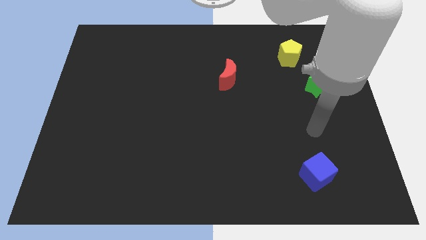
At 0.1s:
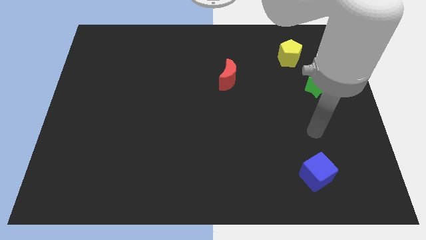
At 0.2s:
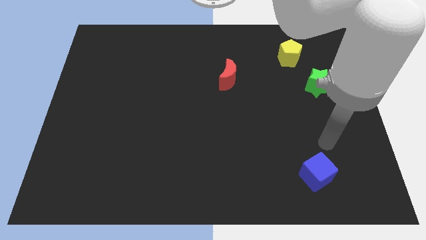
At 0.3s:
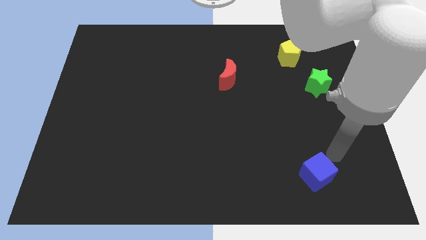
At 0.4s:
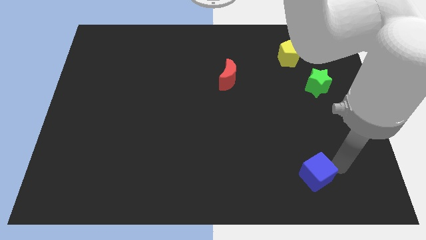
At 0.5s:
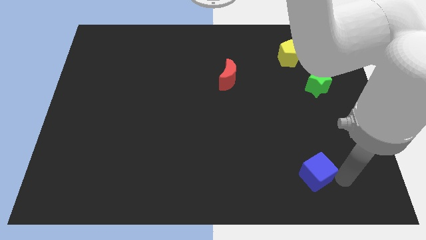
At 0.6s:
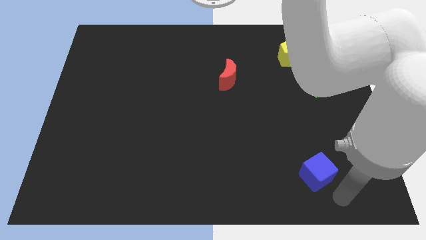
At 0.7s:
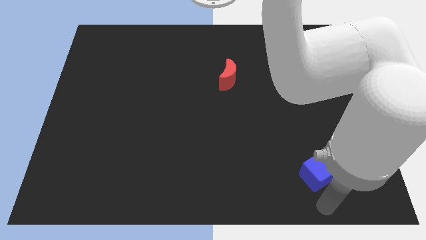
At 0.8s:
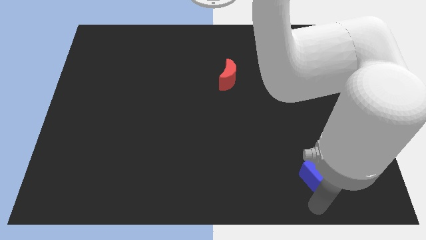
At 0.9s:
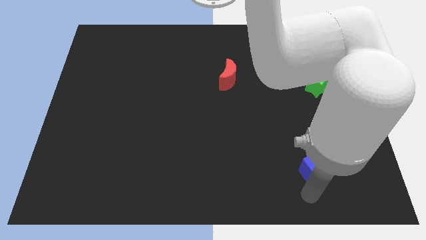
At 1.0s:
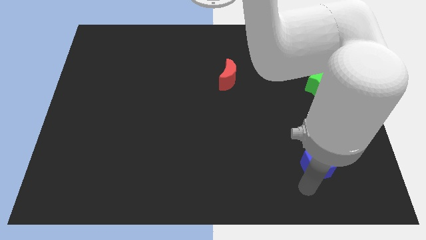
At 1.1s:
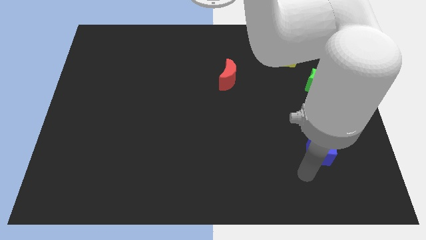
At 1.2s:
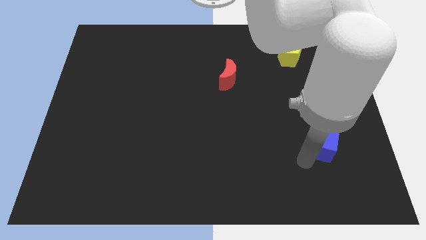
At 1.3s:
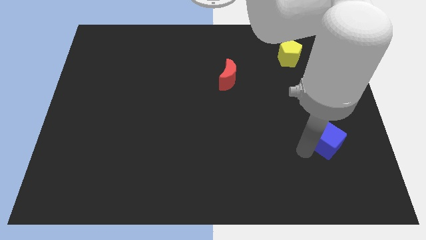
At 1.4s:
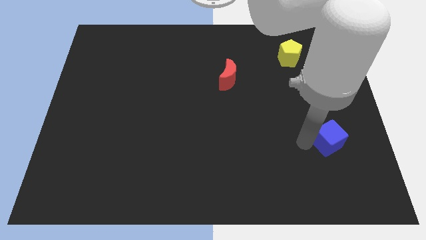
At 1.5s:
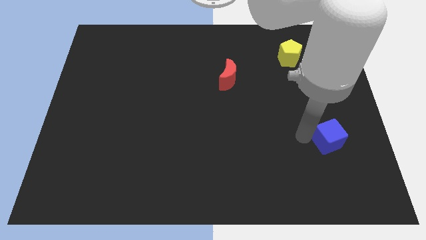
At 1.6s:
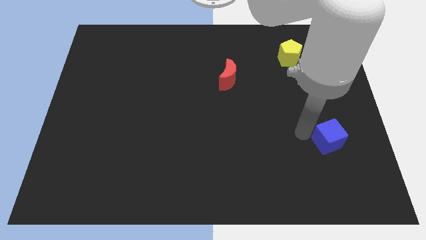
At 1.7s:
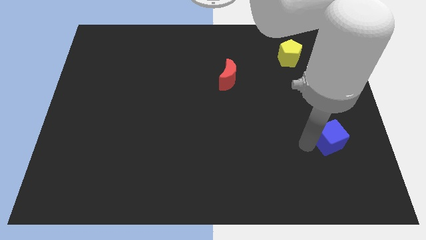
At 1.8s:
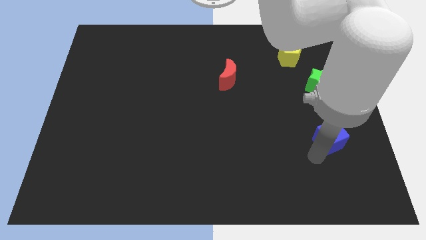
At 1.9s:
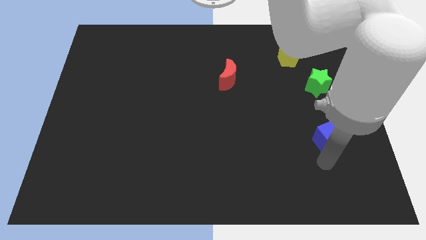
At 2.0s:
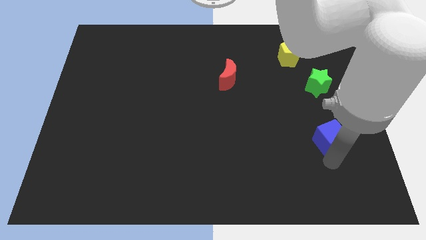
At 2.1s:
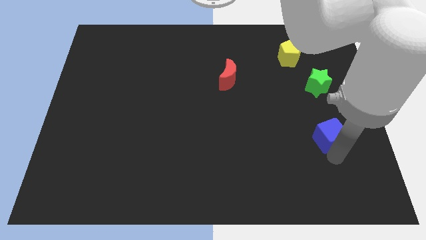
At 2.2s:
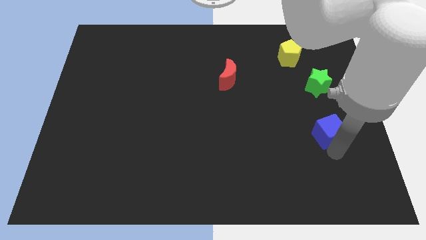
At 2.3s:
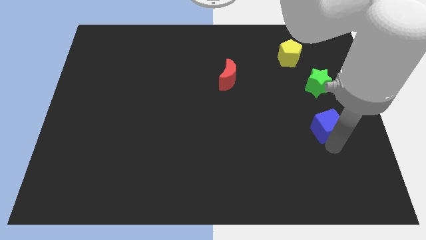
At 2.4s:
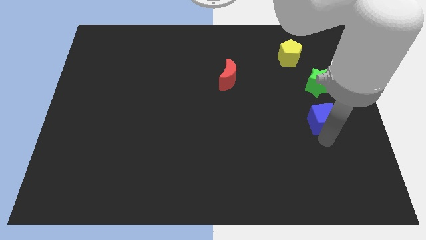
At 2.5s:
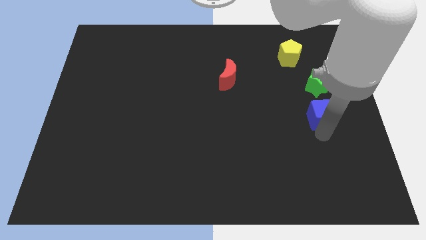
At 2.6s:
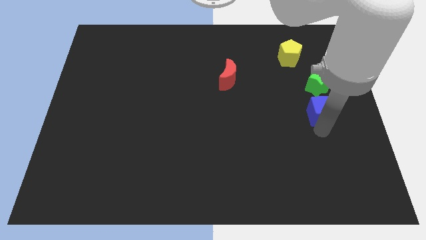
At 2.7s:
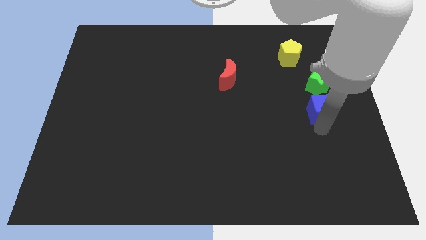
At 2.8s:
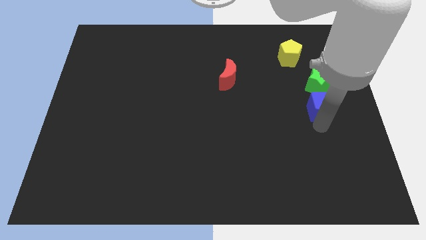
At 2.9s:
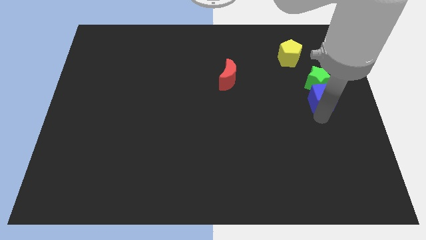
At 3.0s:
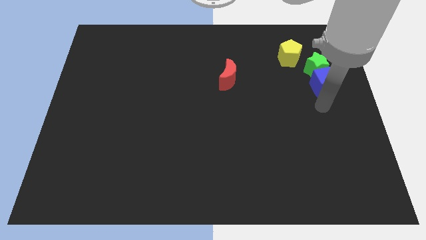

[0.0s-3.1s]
put the blue cube towards the star

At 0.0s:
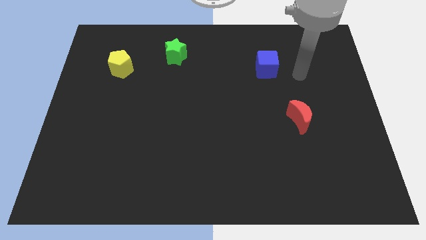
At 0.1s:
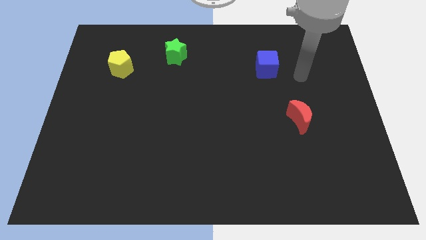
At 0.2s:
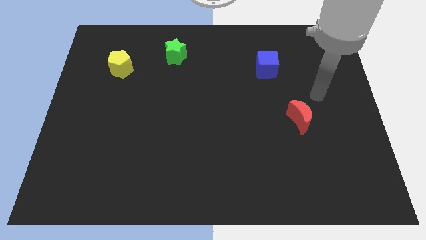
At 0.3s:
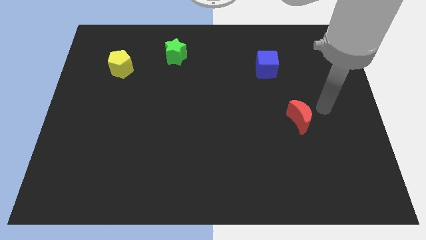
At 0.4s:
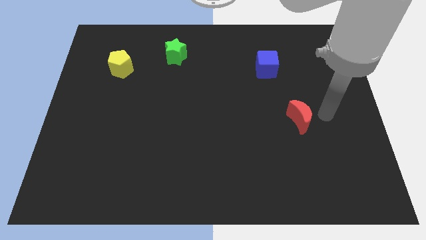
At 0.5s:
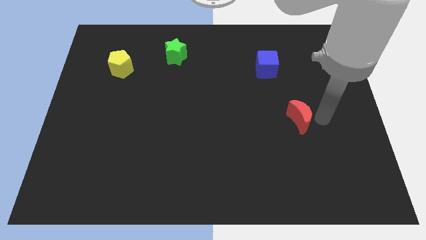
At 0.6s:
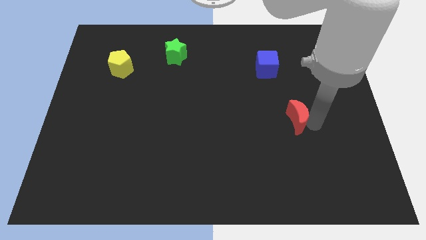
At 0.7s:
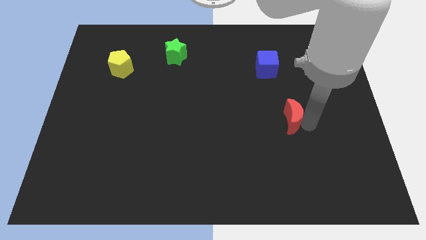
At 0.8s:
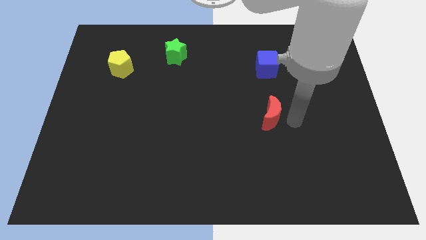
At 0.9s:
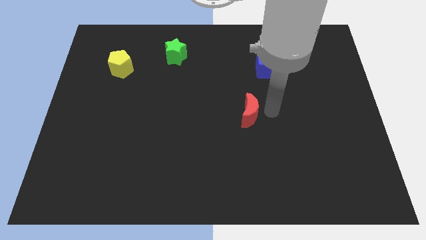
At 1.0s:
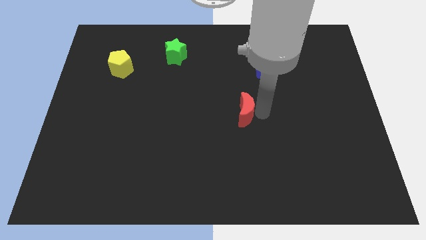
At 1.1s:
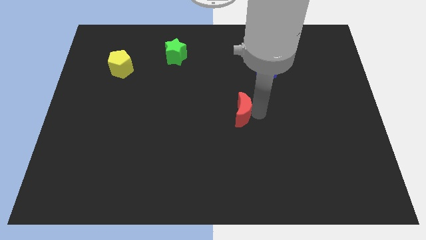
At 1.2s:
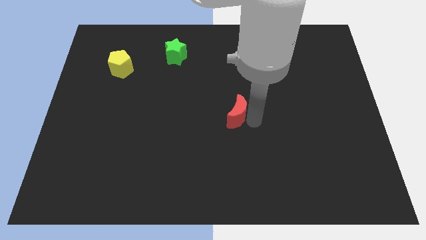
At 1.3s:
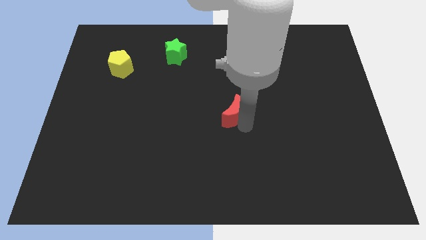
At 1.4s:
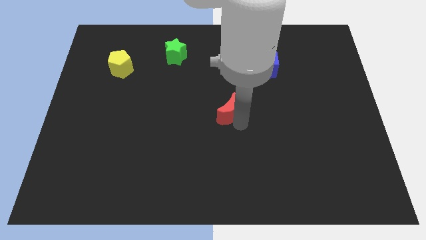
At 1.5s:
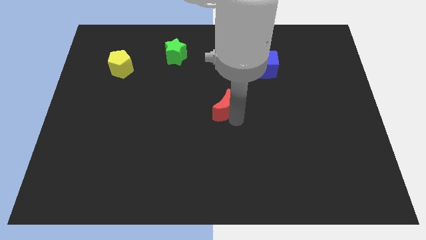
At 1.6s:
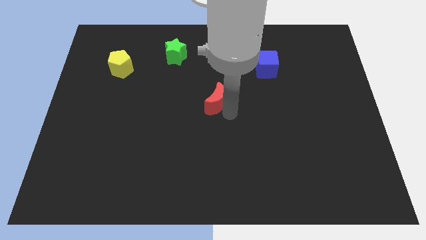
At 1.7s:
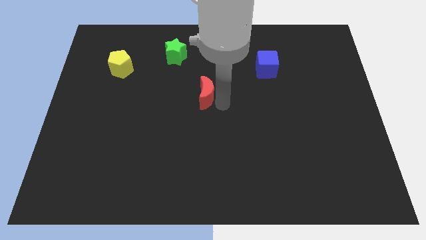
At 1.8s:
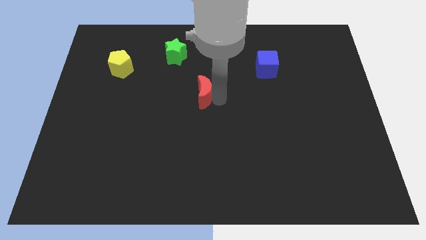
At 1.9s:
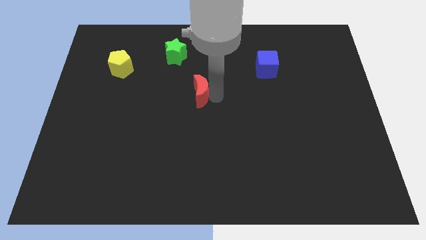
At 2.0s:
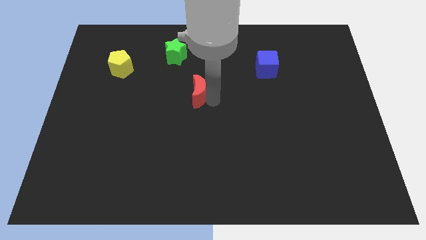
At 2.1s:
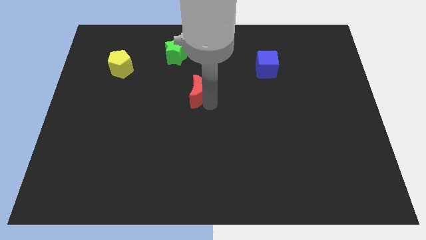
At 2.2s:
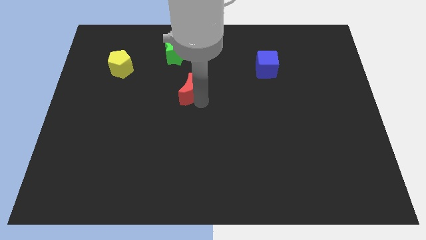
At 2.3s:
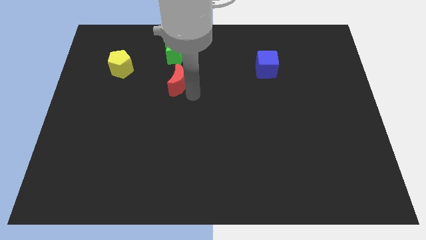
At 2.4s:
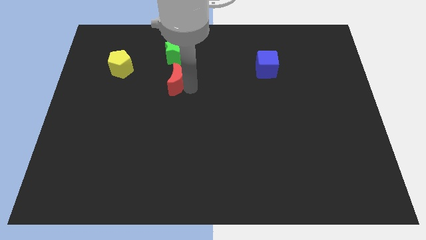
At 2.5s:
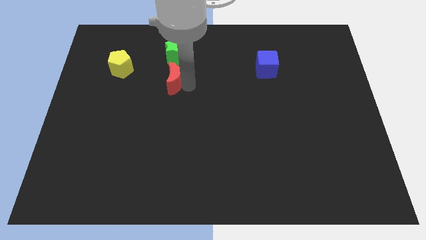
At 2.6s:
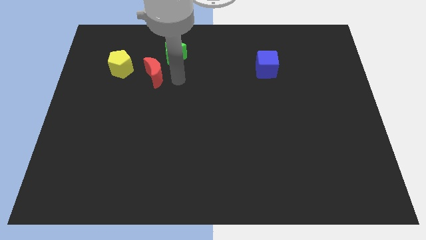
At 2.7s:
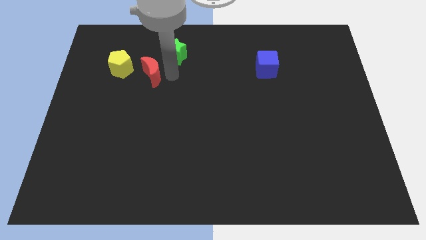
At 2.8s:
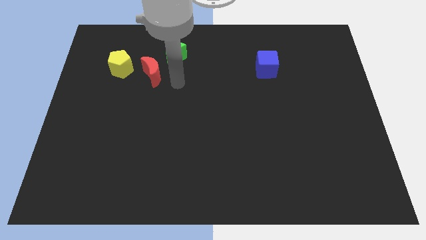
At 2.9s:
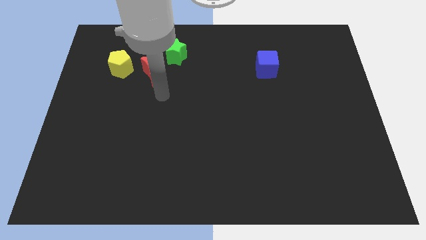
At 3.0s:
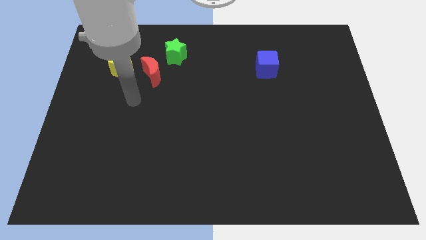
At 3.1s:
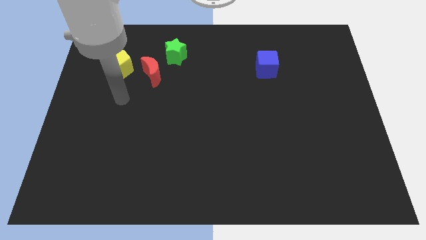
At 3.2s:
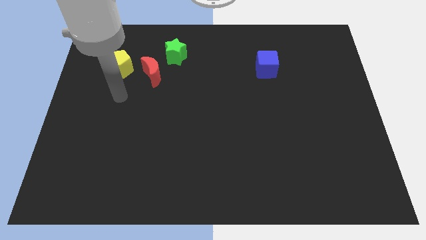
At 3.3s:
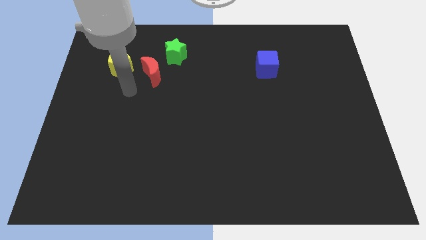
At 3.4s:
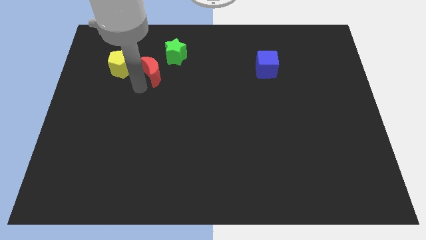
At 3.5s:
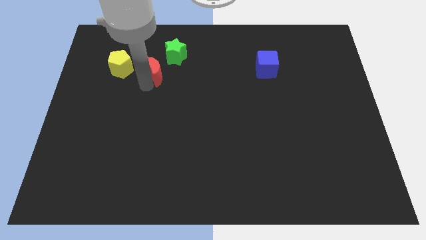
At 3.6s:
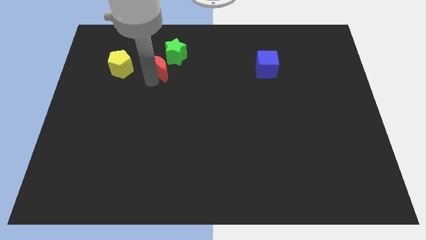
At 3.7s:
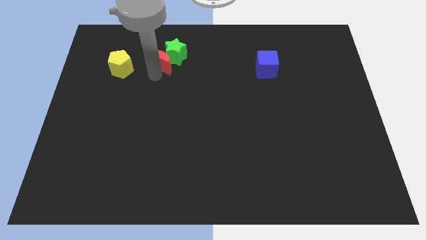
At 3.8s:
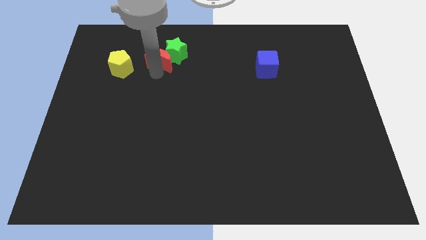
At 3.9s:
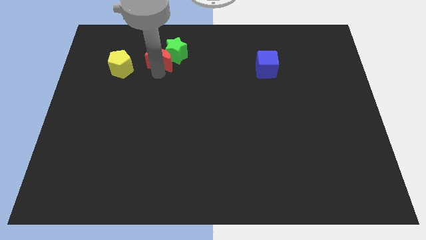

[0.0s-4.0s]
put the moon close to the green block

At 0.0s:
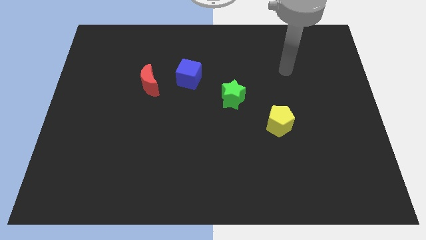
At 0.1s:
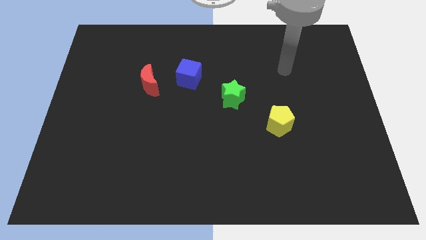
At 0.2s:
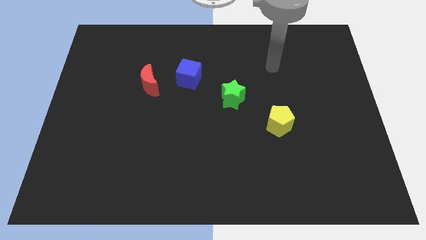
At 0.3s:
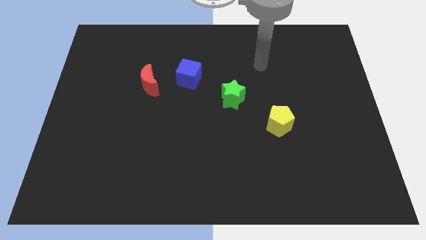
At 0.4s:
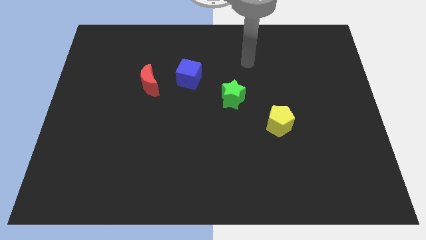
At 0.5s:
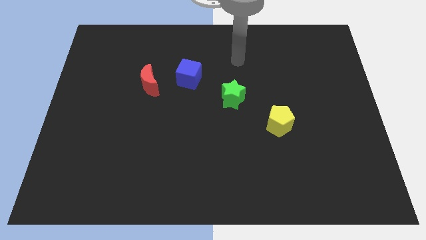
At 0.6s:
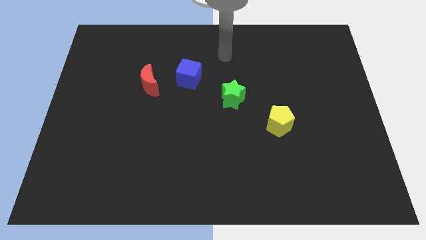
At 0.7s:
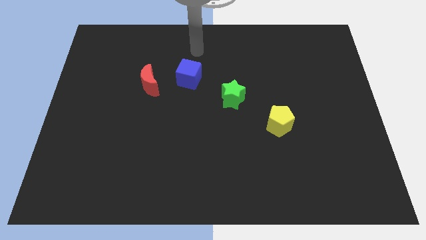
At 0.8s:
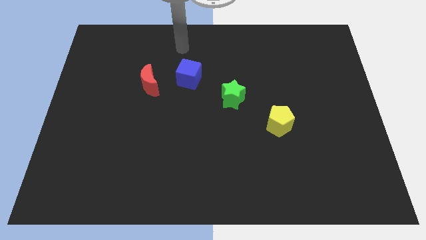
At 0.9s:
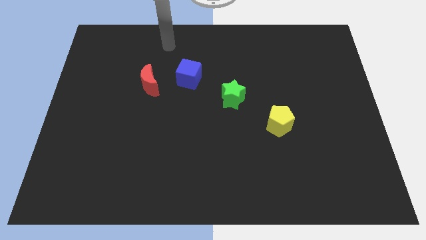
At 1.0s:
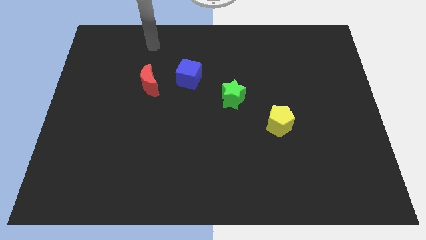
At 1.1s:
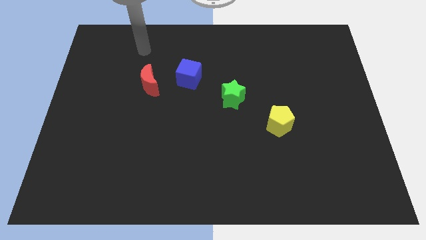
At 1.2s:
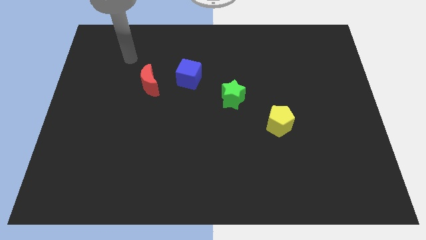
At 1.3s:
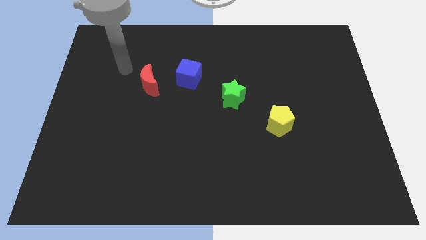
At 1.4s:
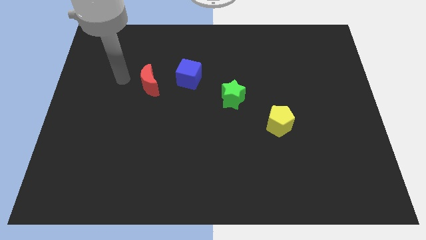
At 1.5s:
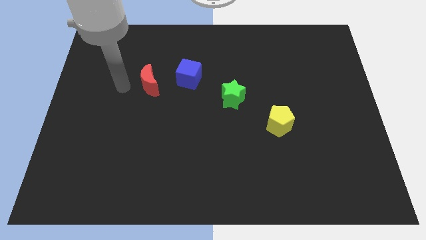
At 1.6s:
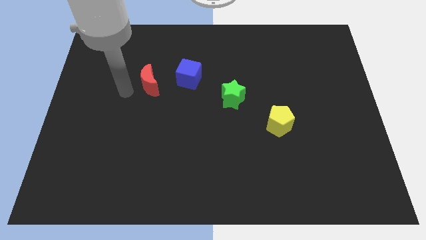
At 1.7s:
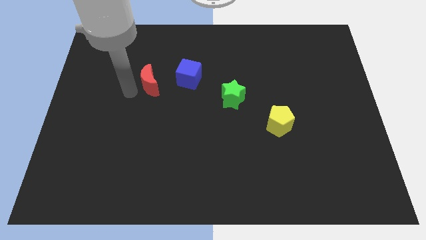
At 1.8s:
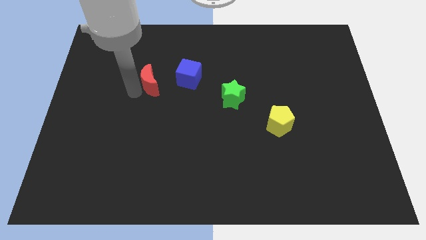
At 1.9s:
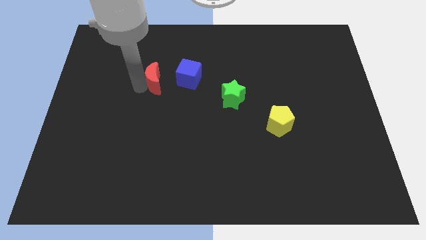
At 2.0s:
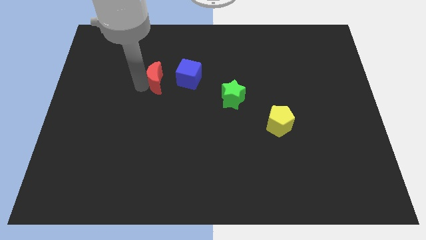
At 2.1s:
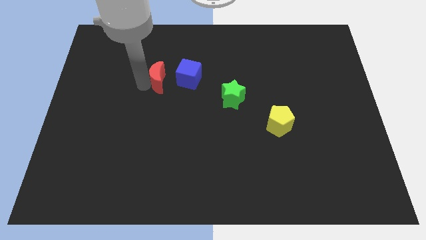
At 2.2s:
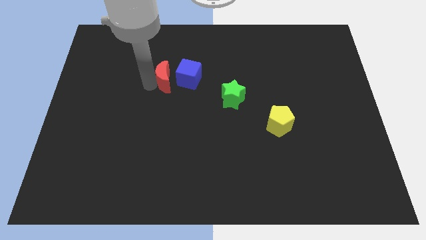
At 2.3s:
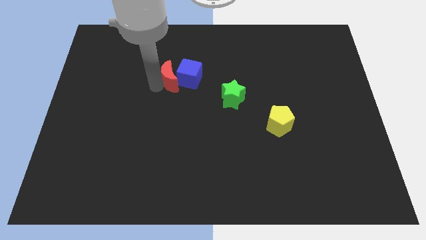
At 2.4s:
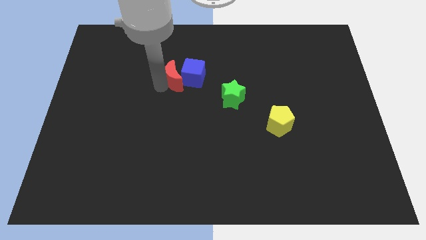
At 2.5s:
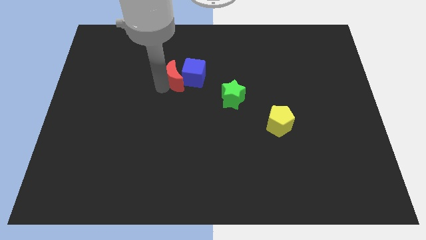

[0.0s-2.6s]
push the red moon close to the blue block
